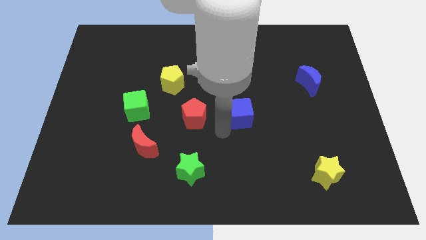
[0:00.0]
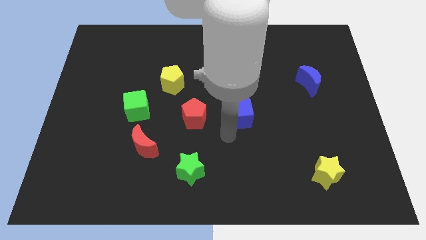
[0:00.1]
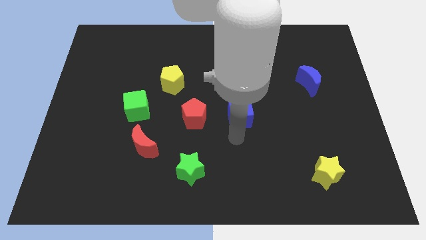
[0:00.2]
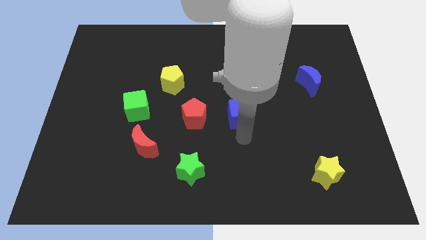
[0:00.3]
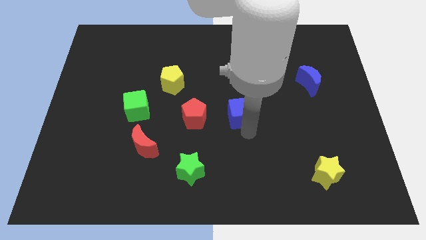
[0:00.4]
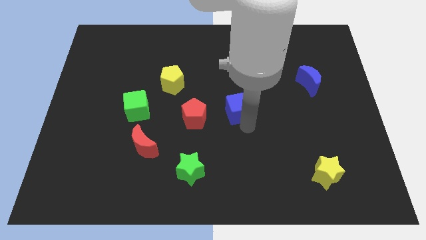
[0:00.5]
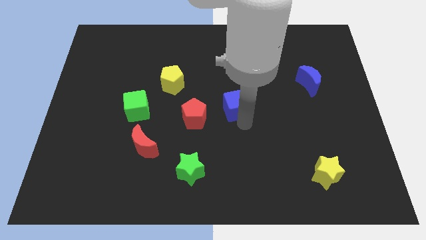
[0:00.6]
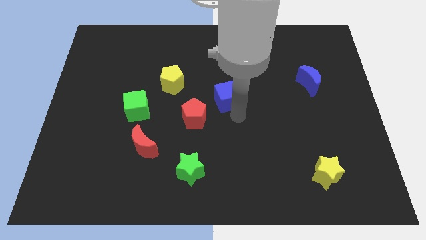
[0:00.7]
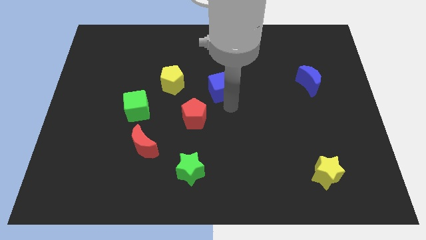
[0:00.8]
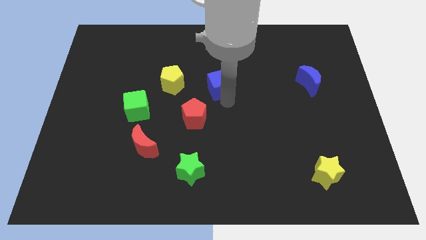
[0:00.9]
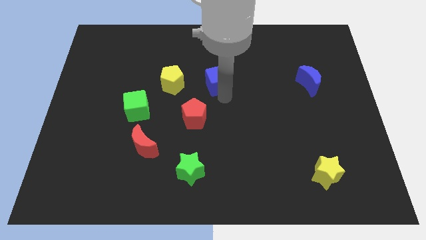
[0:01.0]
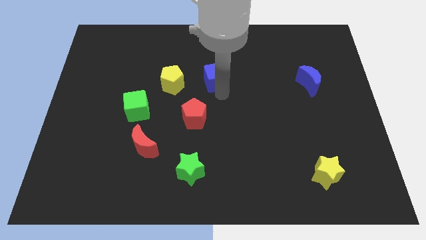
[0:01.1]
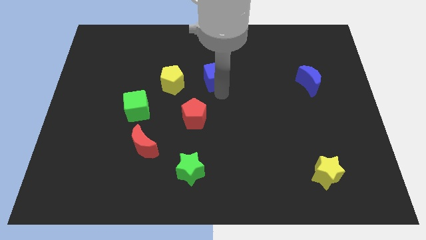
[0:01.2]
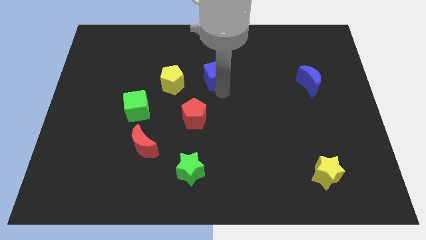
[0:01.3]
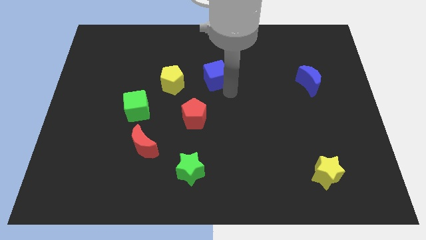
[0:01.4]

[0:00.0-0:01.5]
place the blue cube at right side of the yellow pentagon

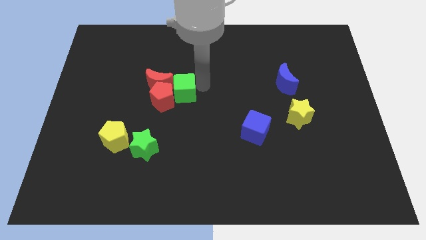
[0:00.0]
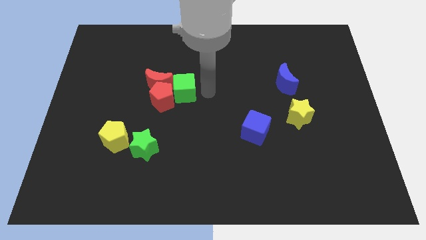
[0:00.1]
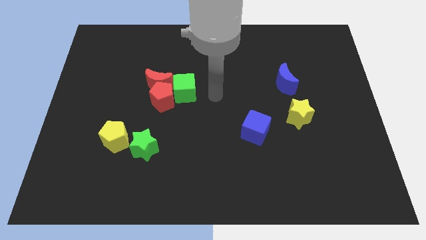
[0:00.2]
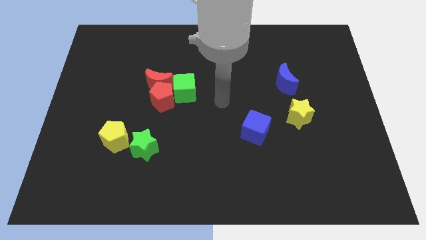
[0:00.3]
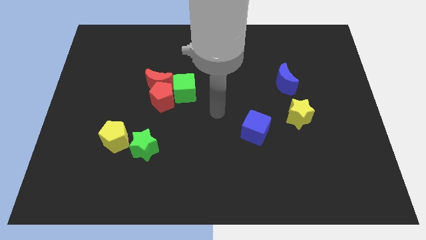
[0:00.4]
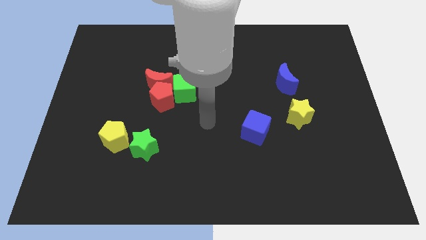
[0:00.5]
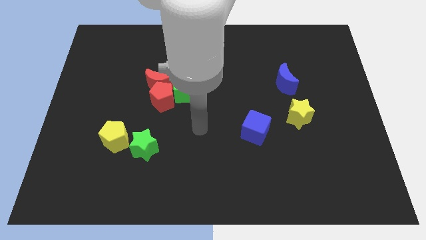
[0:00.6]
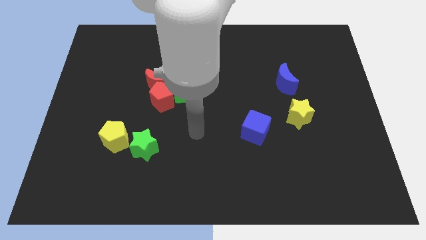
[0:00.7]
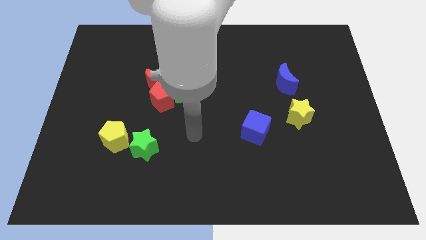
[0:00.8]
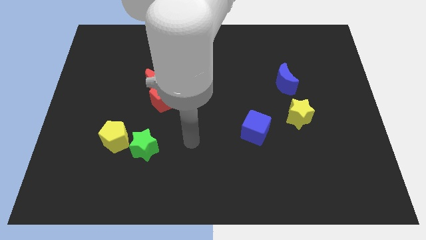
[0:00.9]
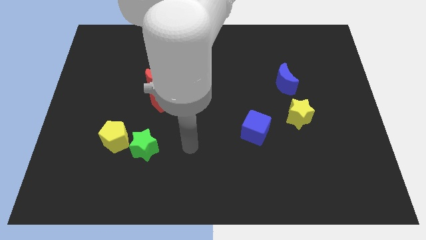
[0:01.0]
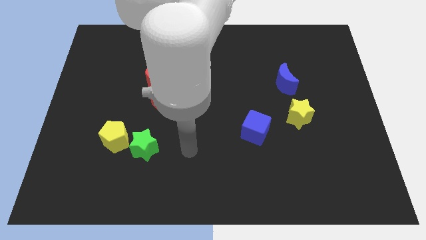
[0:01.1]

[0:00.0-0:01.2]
put your arm in between the green star and blue moon

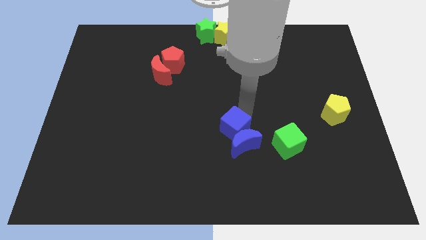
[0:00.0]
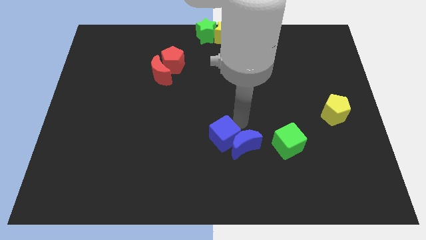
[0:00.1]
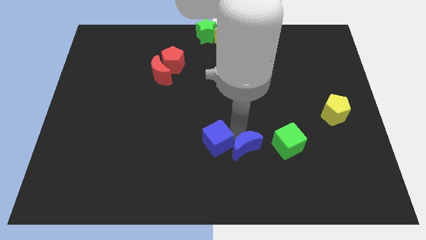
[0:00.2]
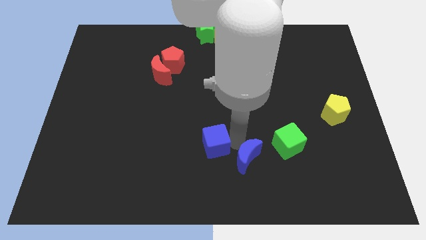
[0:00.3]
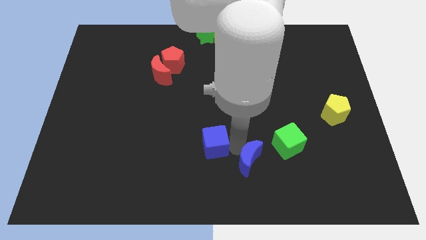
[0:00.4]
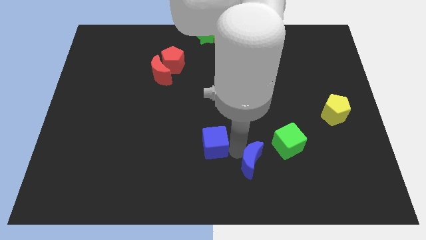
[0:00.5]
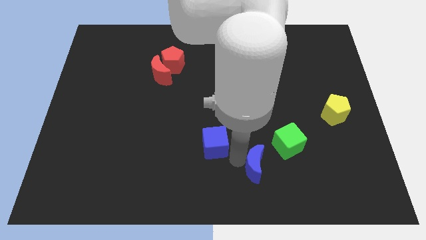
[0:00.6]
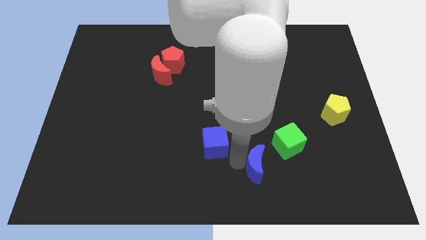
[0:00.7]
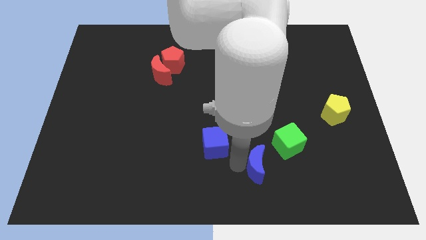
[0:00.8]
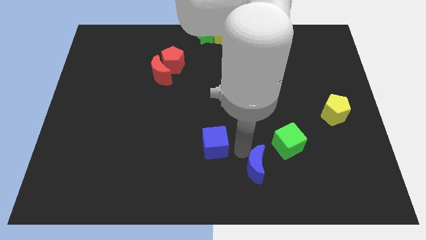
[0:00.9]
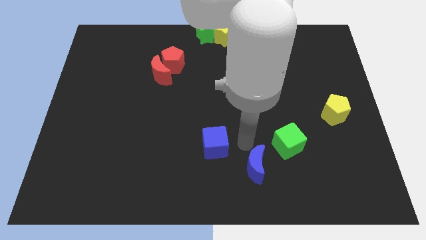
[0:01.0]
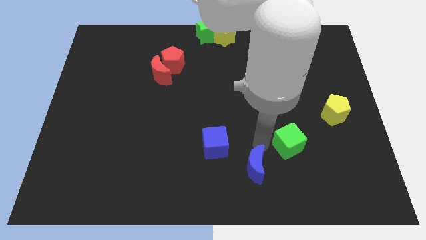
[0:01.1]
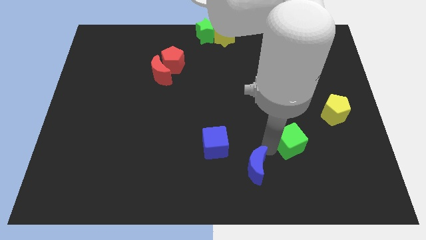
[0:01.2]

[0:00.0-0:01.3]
separate blue blocks

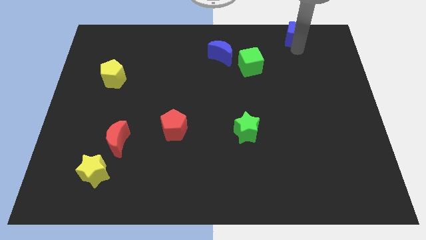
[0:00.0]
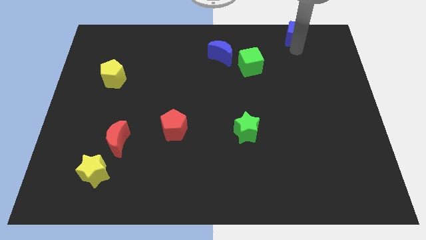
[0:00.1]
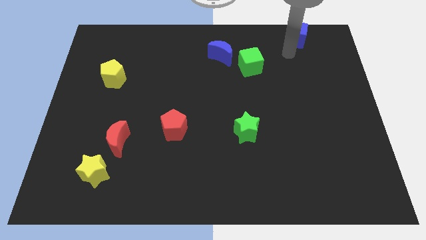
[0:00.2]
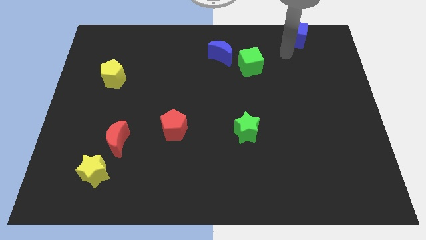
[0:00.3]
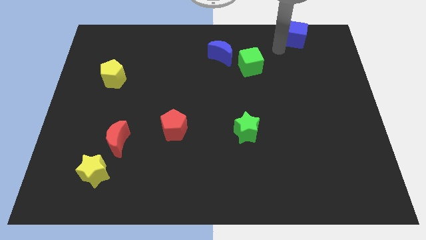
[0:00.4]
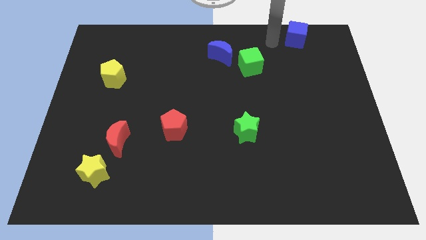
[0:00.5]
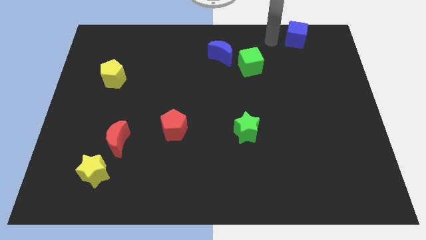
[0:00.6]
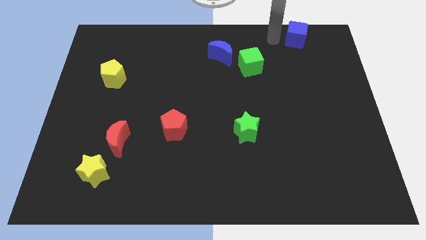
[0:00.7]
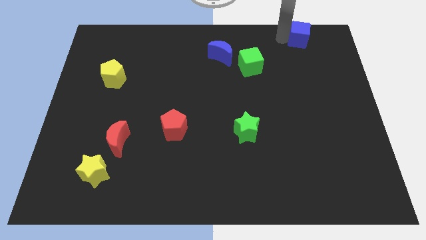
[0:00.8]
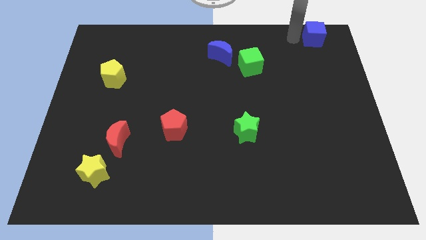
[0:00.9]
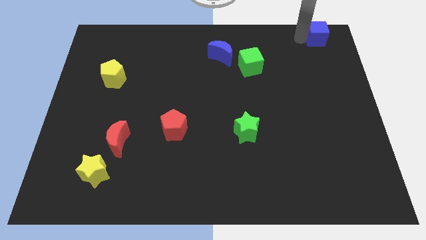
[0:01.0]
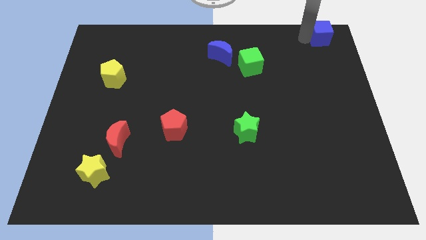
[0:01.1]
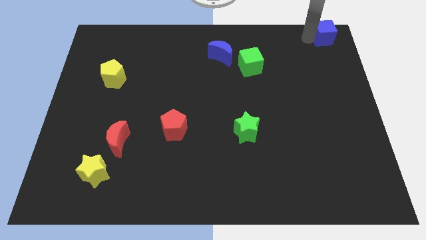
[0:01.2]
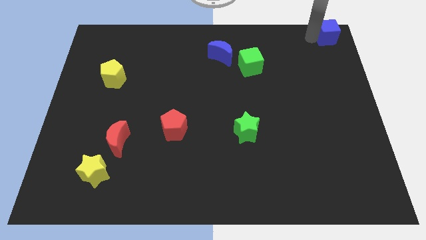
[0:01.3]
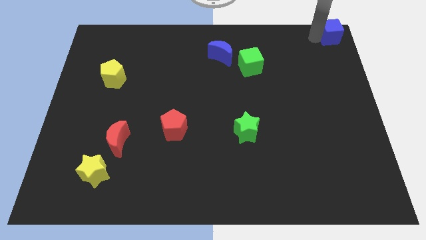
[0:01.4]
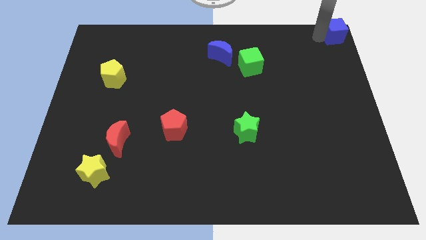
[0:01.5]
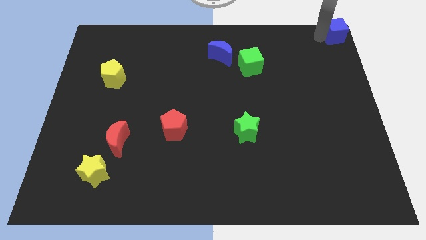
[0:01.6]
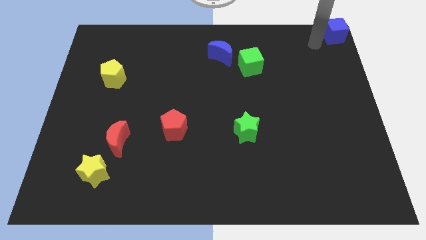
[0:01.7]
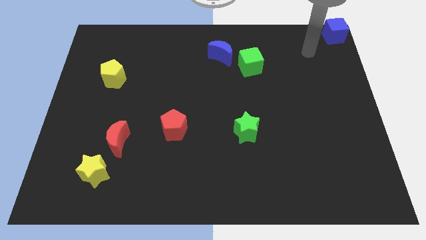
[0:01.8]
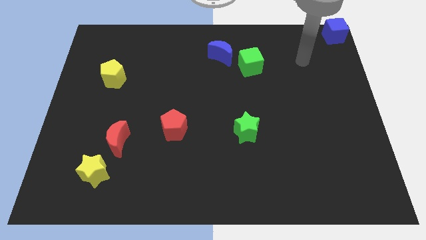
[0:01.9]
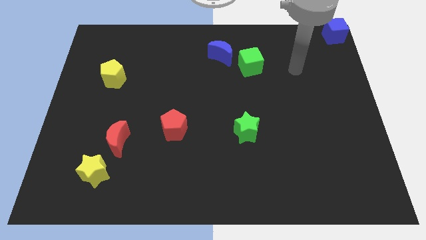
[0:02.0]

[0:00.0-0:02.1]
move the blue cube to the top right

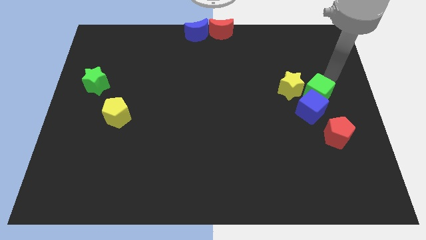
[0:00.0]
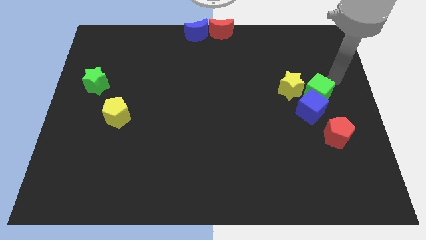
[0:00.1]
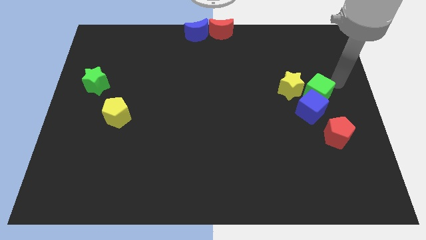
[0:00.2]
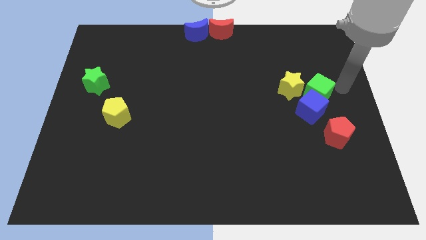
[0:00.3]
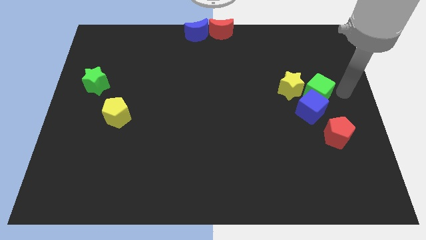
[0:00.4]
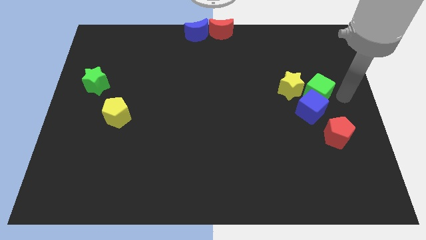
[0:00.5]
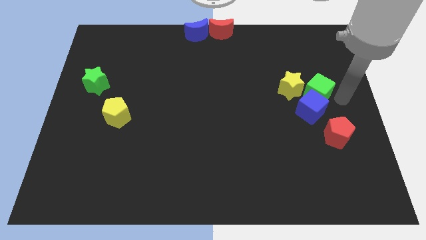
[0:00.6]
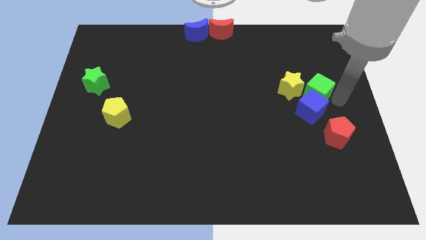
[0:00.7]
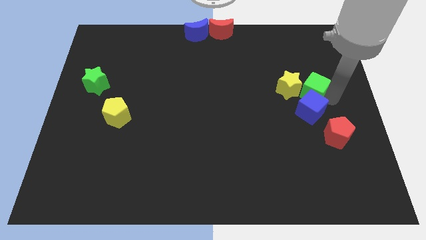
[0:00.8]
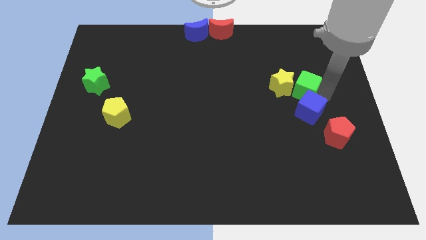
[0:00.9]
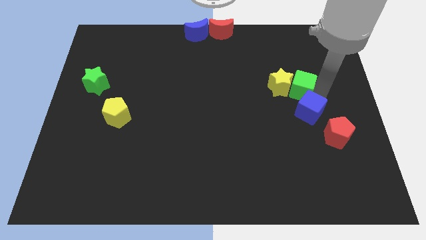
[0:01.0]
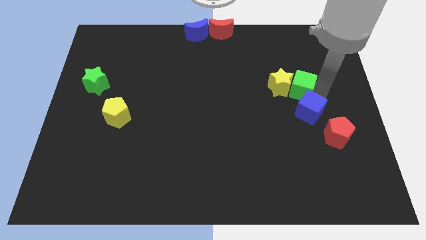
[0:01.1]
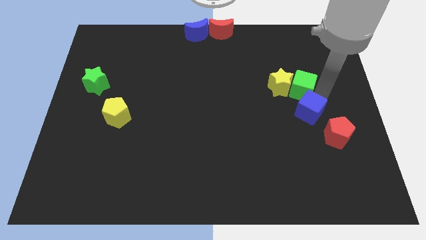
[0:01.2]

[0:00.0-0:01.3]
push the green cube into the yellow star

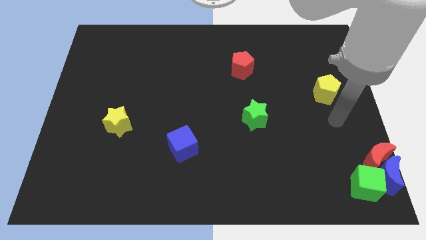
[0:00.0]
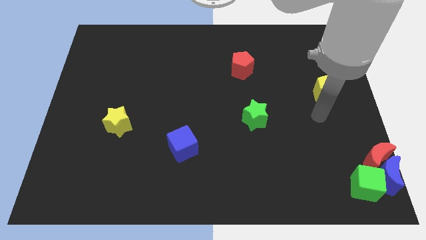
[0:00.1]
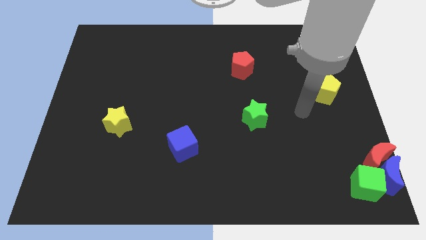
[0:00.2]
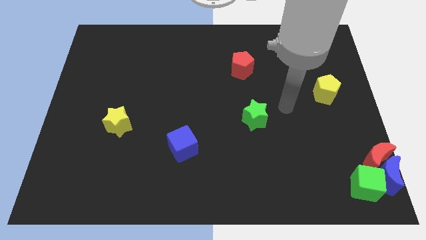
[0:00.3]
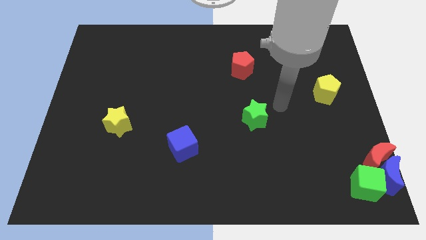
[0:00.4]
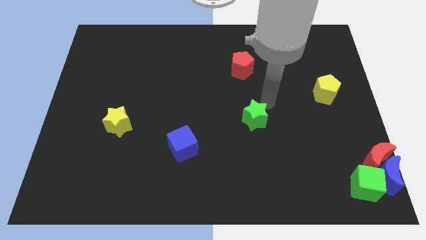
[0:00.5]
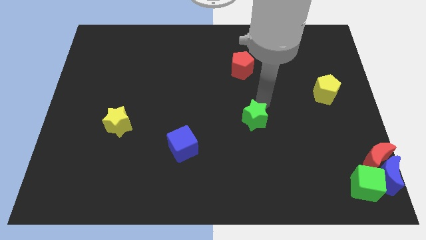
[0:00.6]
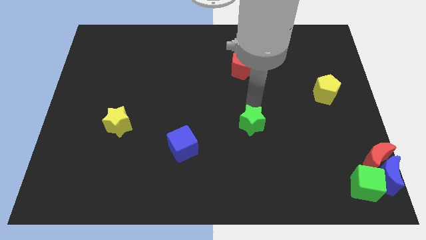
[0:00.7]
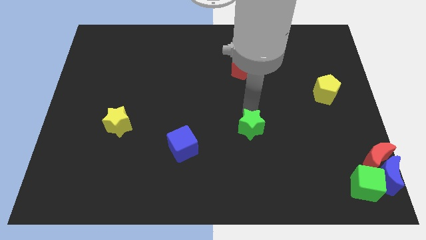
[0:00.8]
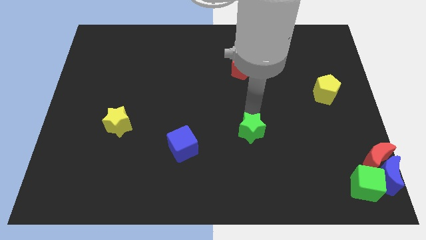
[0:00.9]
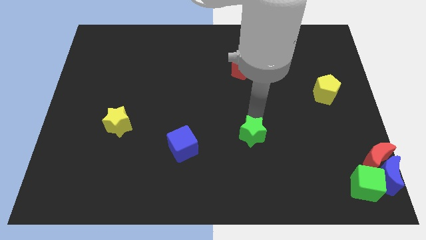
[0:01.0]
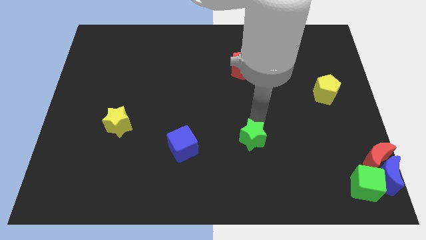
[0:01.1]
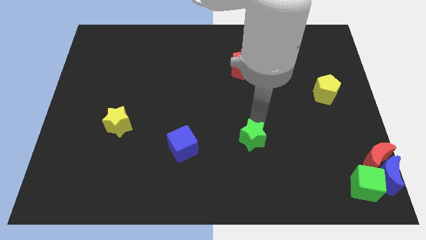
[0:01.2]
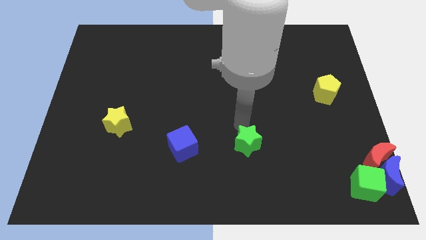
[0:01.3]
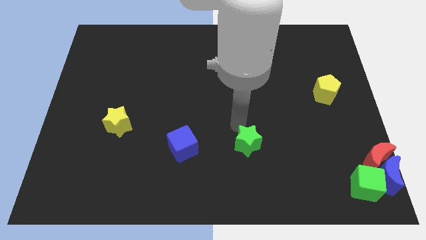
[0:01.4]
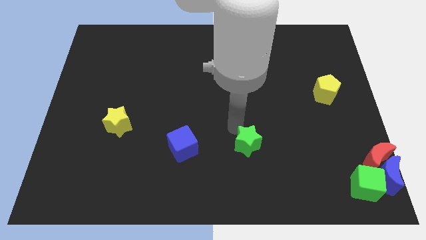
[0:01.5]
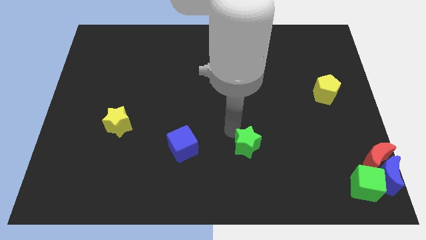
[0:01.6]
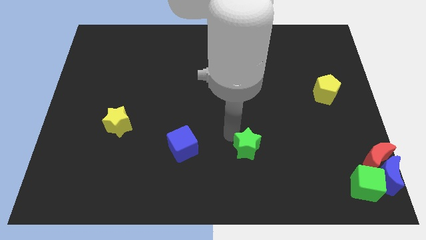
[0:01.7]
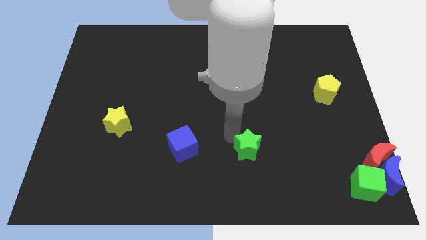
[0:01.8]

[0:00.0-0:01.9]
push the green star towards the bottom
